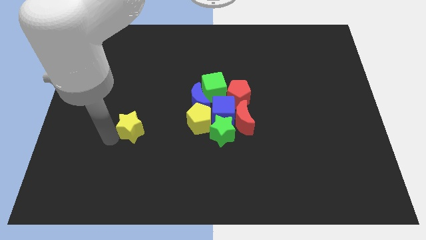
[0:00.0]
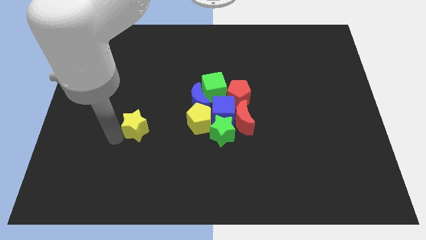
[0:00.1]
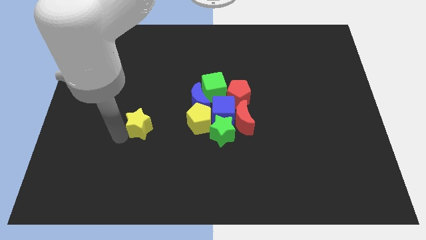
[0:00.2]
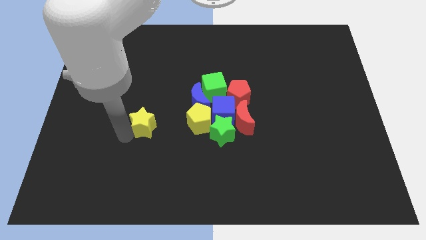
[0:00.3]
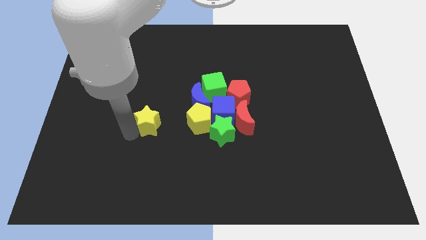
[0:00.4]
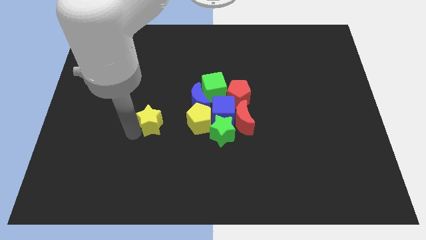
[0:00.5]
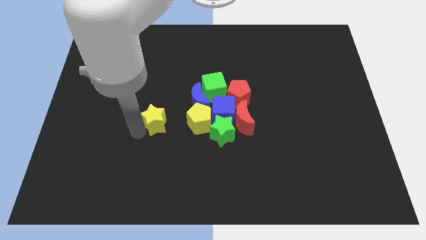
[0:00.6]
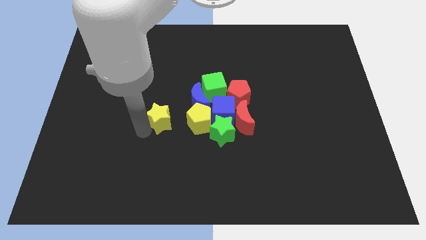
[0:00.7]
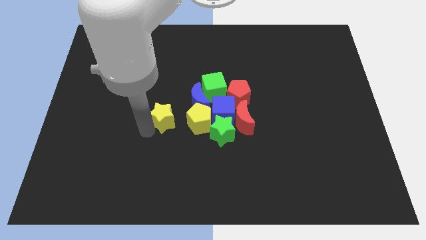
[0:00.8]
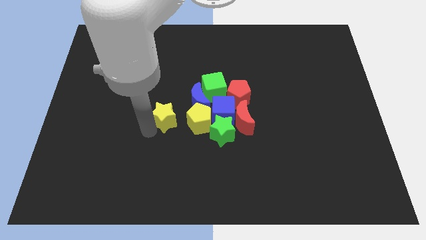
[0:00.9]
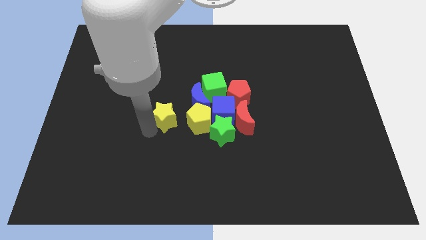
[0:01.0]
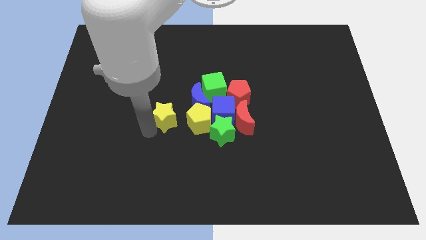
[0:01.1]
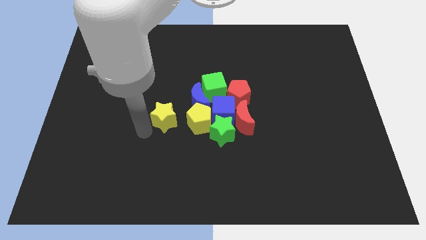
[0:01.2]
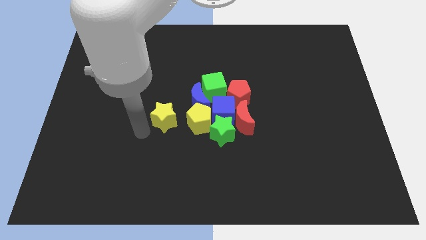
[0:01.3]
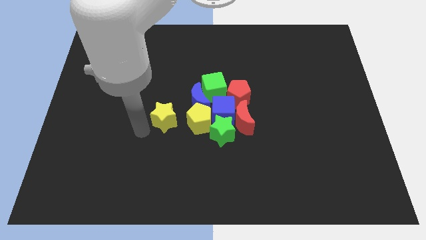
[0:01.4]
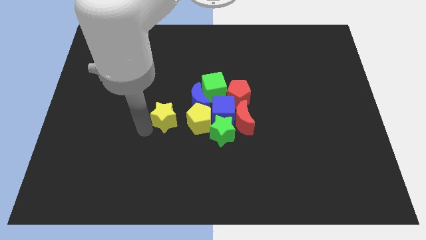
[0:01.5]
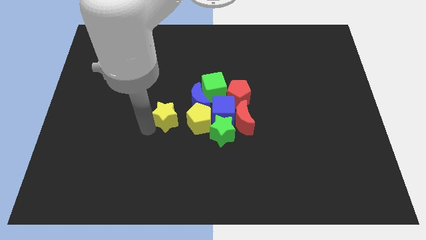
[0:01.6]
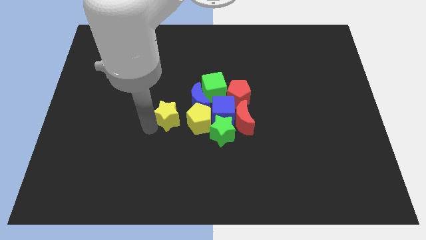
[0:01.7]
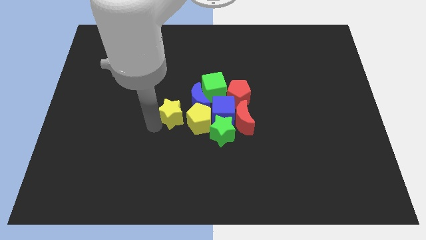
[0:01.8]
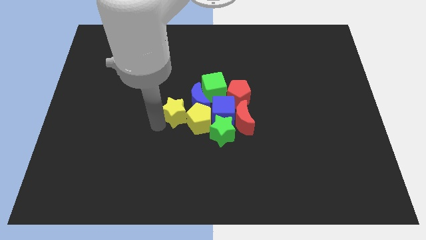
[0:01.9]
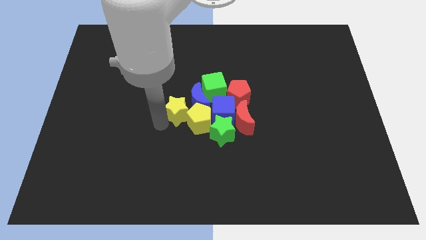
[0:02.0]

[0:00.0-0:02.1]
drag the yellow star slightly to the right

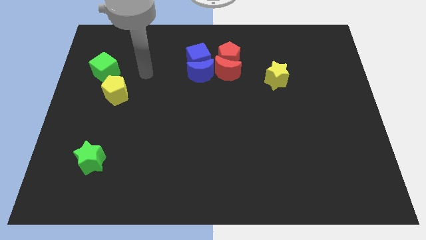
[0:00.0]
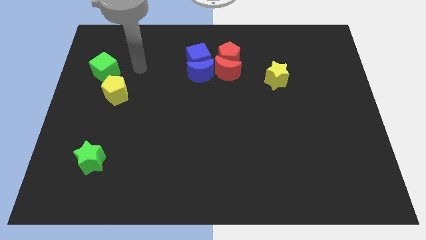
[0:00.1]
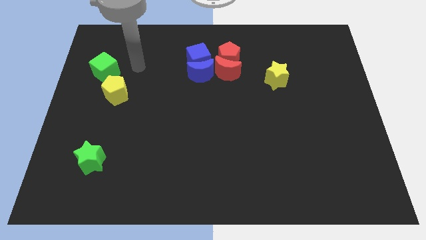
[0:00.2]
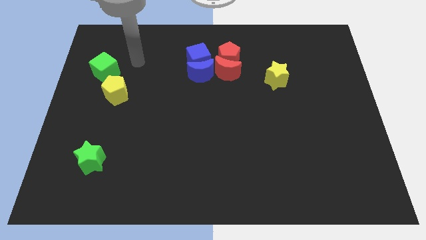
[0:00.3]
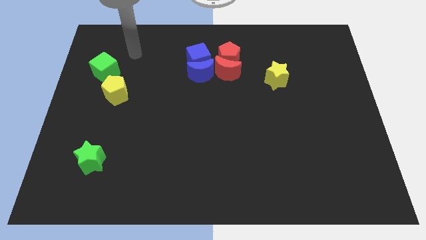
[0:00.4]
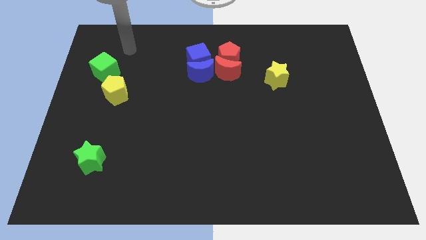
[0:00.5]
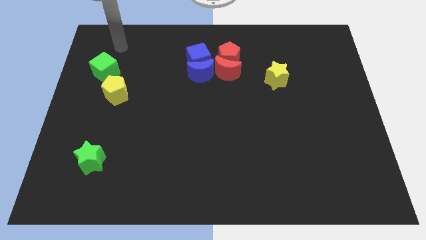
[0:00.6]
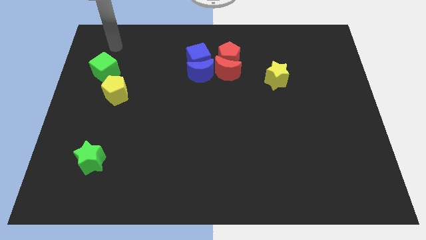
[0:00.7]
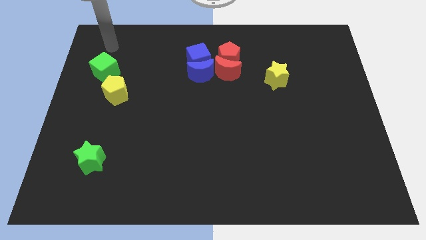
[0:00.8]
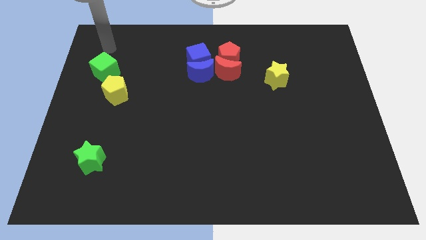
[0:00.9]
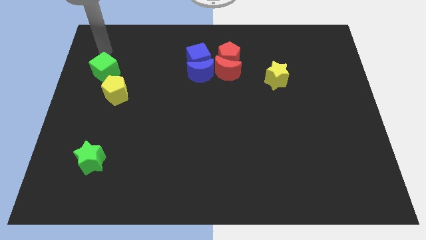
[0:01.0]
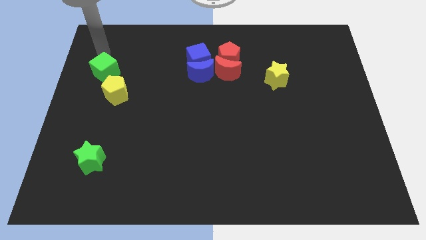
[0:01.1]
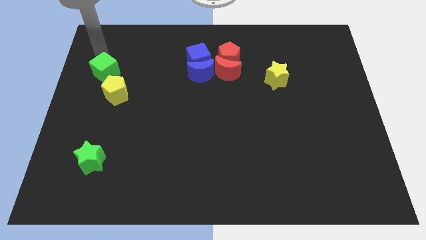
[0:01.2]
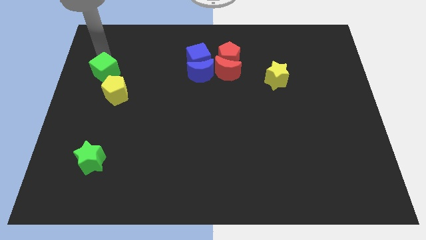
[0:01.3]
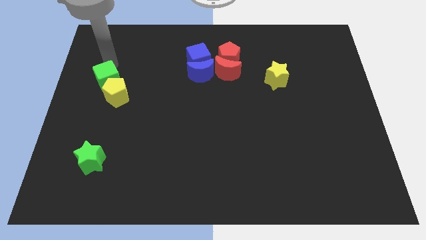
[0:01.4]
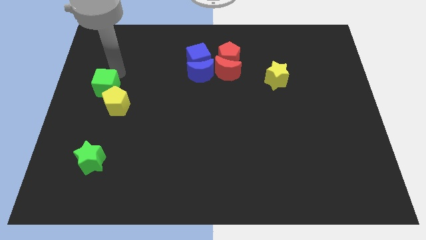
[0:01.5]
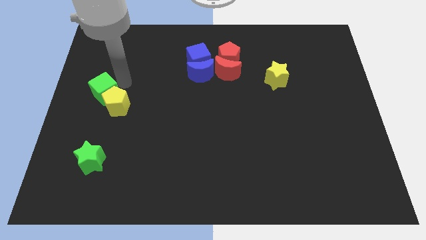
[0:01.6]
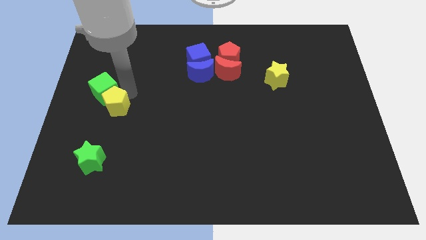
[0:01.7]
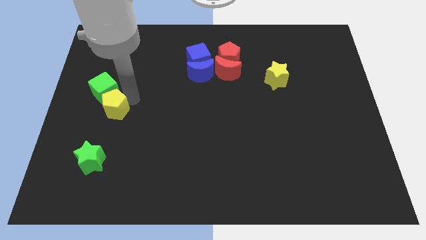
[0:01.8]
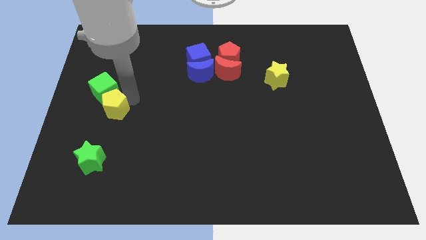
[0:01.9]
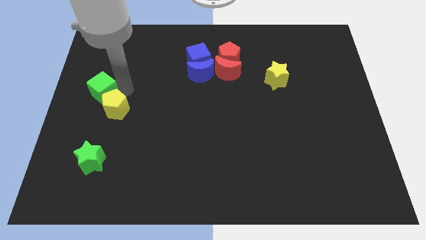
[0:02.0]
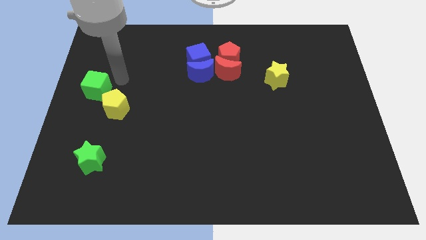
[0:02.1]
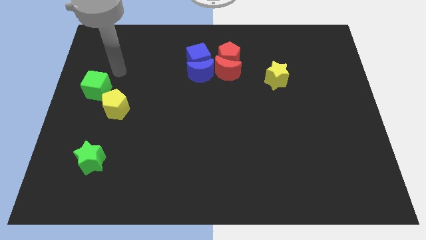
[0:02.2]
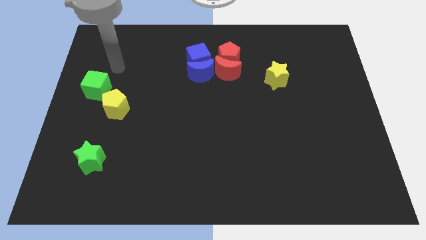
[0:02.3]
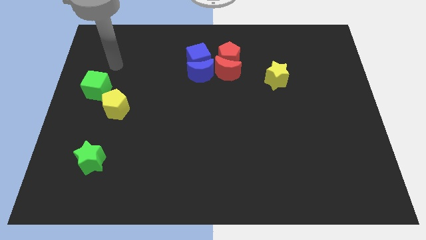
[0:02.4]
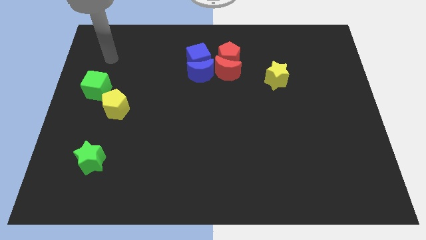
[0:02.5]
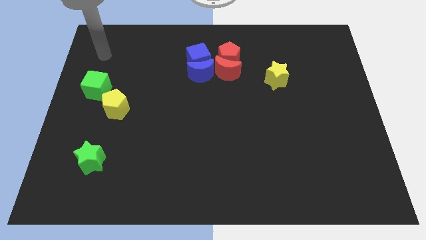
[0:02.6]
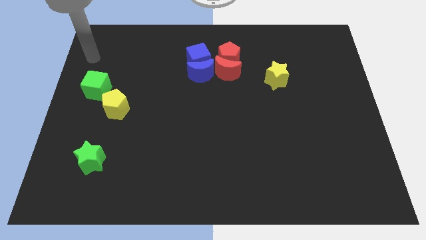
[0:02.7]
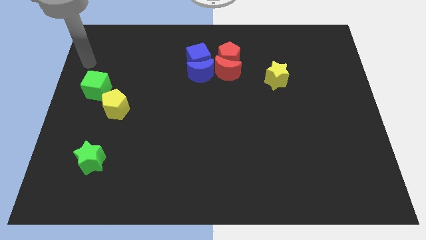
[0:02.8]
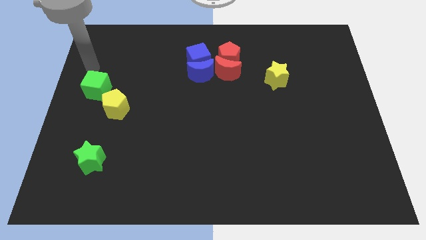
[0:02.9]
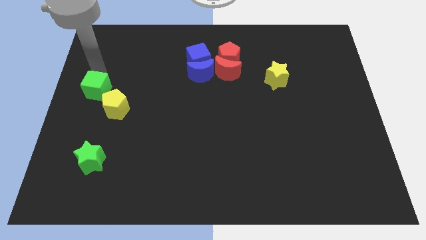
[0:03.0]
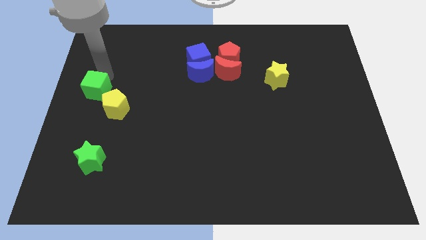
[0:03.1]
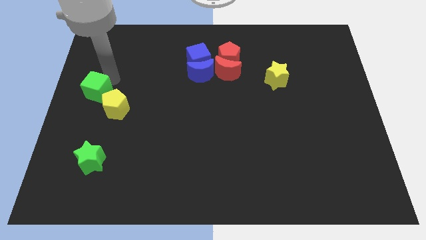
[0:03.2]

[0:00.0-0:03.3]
move the green cube into yellow pentagon

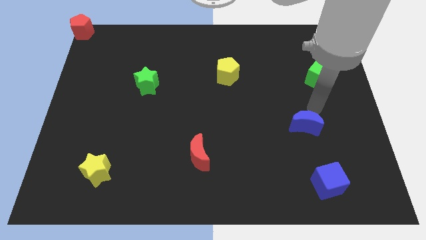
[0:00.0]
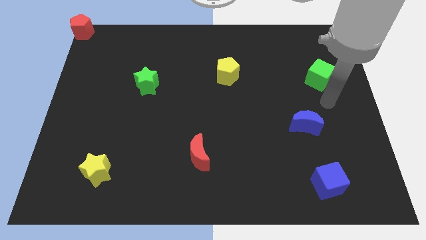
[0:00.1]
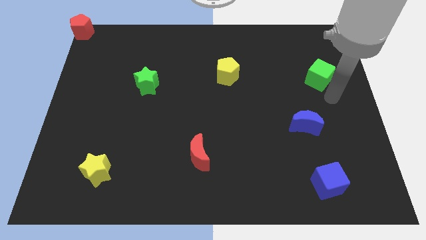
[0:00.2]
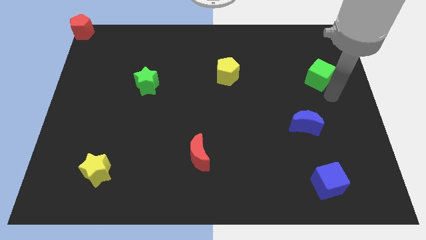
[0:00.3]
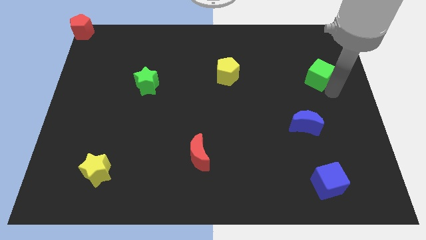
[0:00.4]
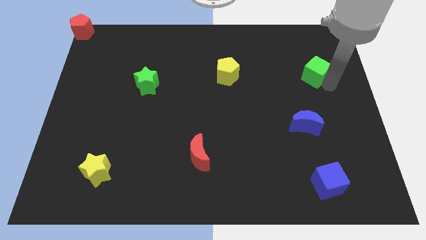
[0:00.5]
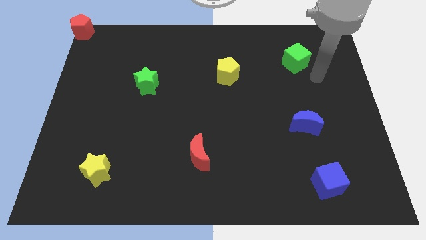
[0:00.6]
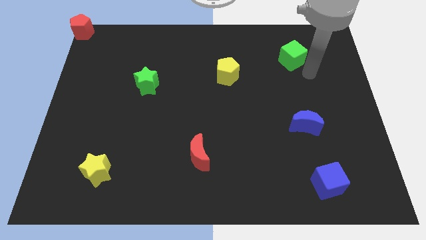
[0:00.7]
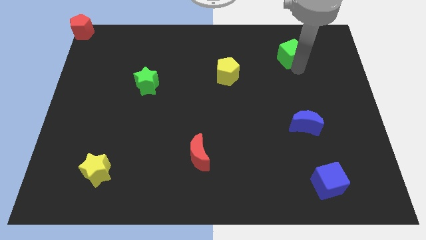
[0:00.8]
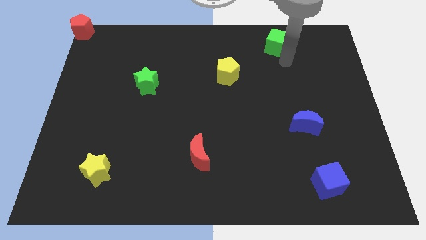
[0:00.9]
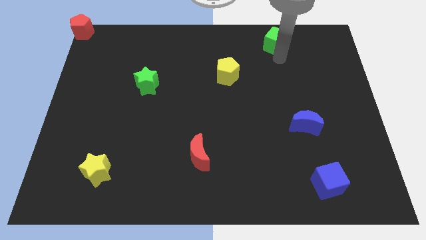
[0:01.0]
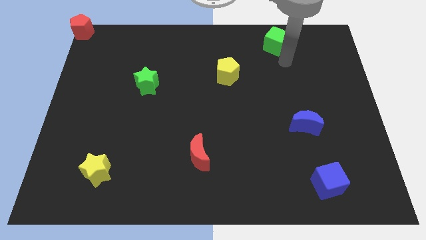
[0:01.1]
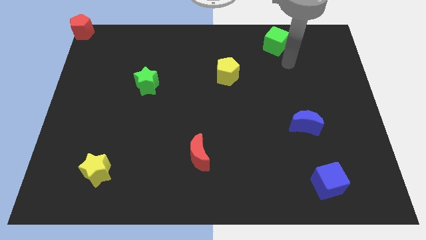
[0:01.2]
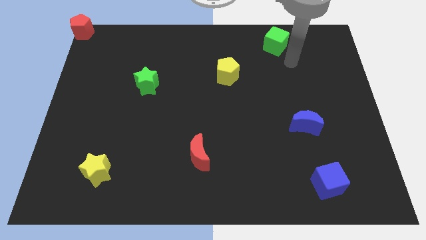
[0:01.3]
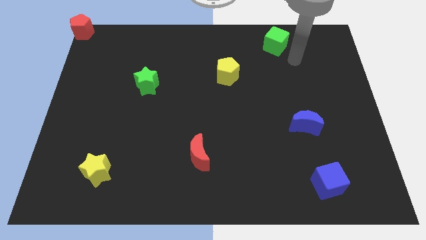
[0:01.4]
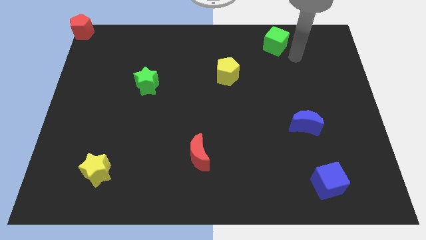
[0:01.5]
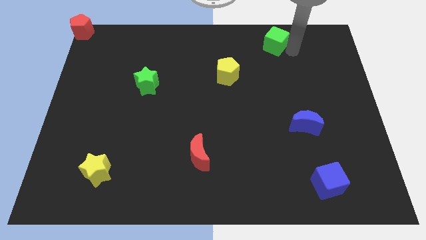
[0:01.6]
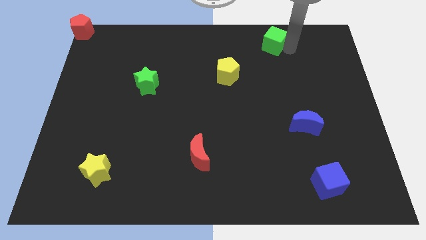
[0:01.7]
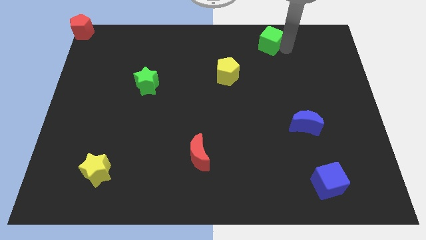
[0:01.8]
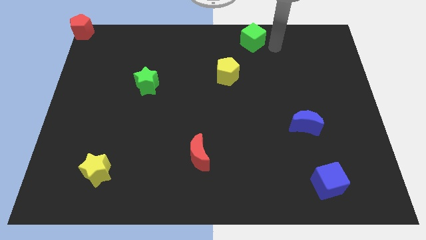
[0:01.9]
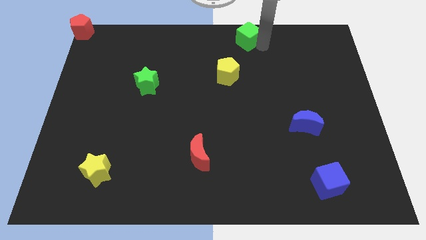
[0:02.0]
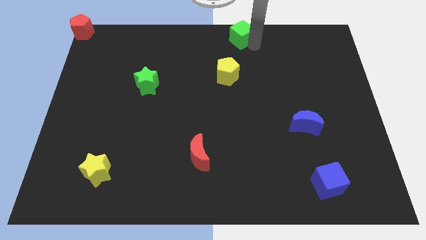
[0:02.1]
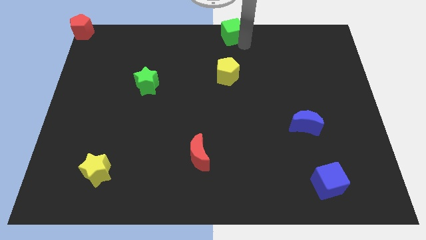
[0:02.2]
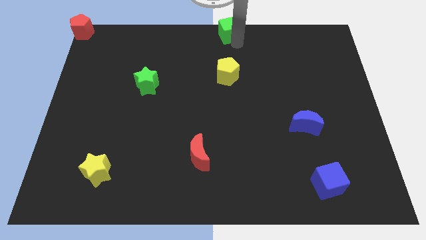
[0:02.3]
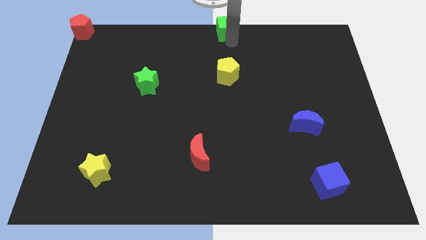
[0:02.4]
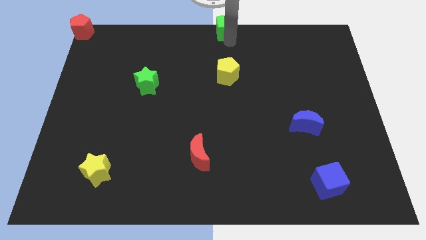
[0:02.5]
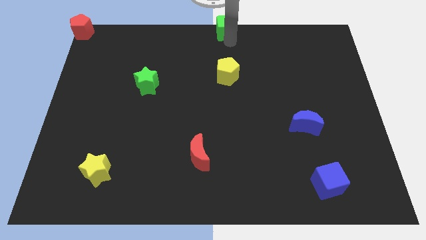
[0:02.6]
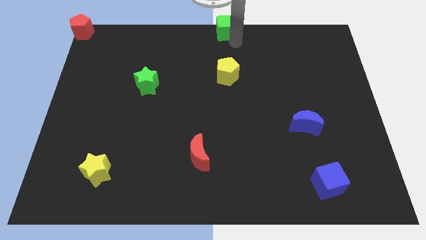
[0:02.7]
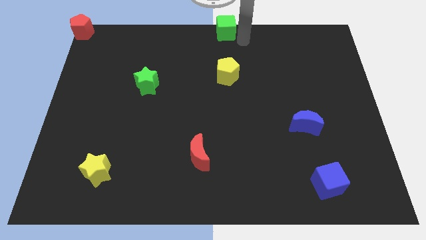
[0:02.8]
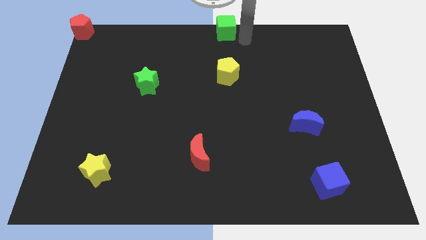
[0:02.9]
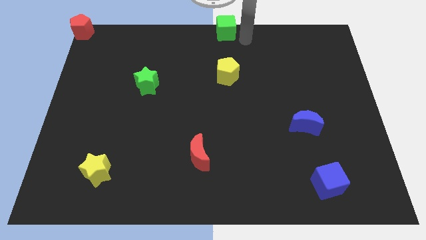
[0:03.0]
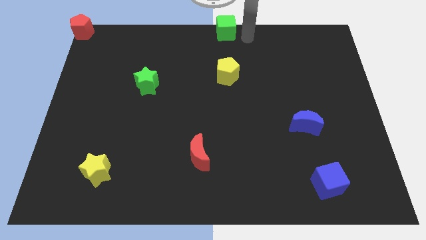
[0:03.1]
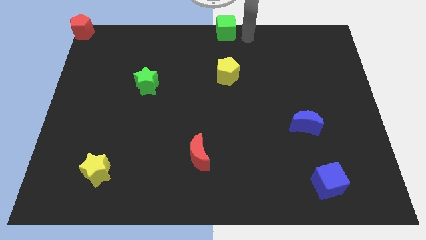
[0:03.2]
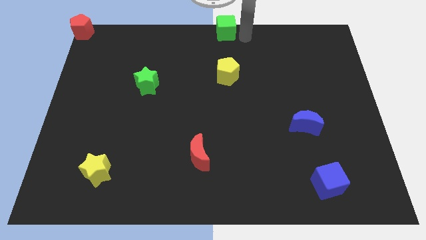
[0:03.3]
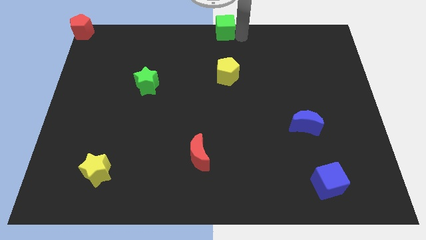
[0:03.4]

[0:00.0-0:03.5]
push the green cube to the top center of the board
